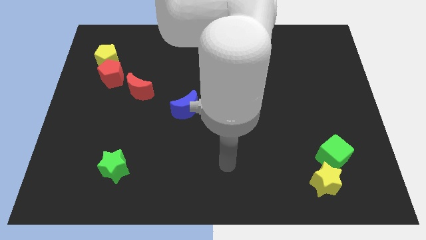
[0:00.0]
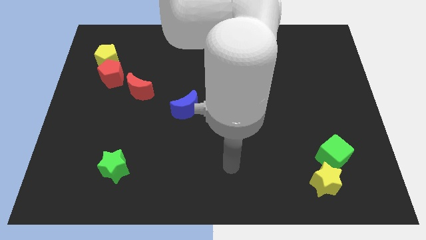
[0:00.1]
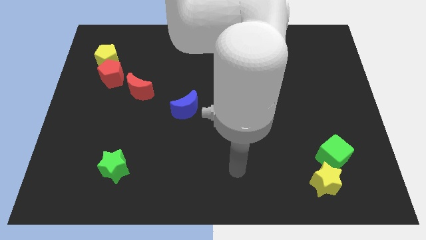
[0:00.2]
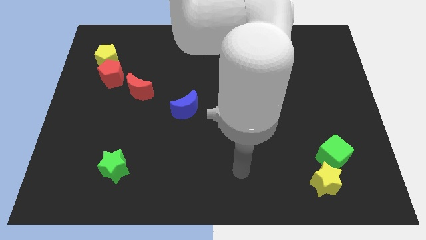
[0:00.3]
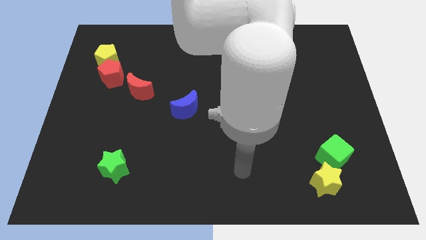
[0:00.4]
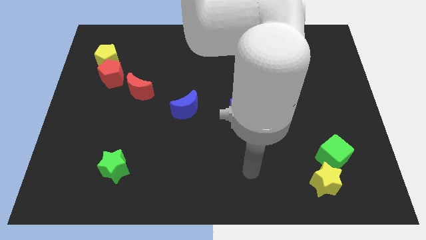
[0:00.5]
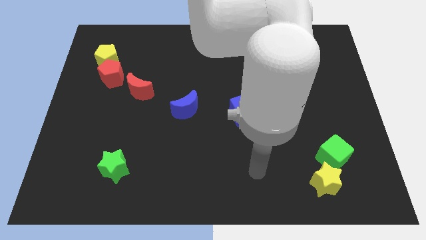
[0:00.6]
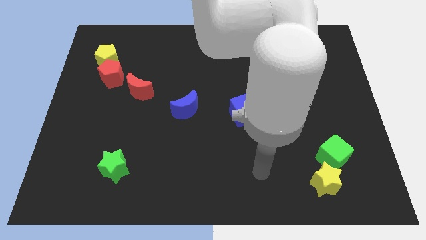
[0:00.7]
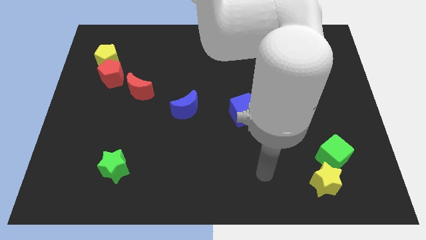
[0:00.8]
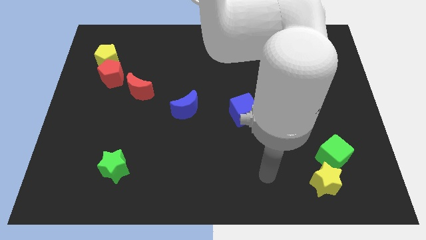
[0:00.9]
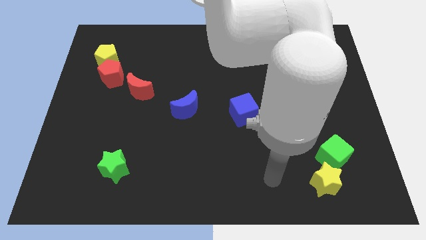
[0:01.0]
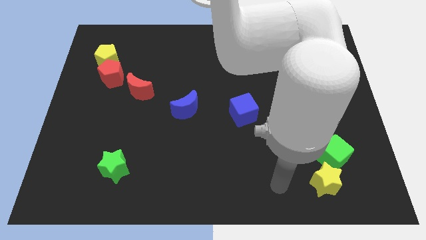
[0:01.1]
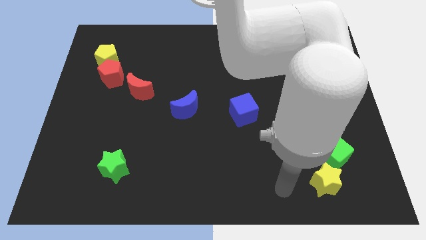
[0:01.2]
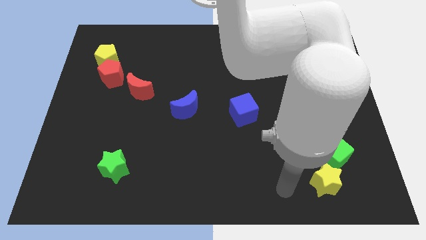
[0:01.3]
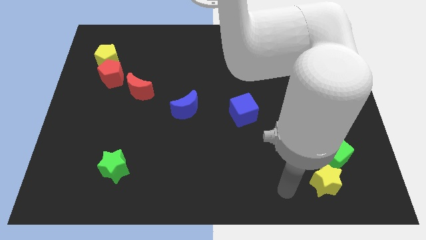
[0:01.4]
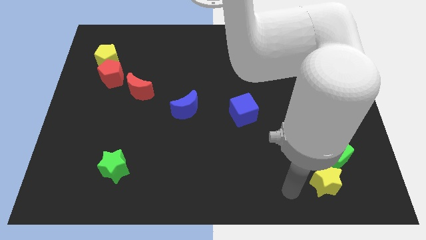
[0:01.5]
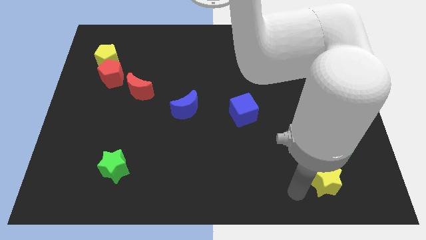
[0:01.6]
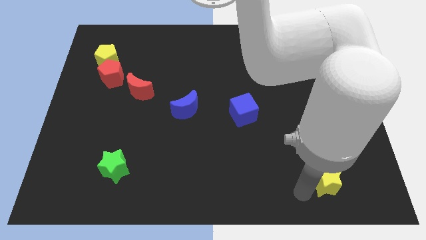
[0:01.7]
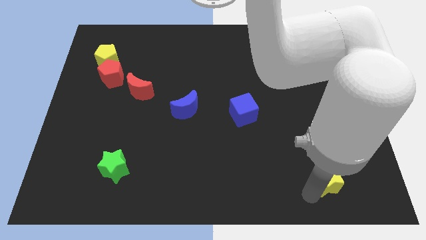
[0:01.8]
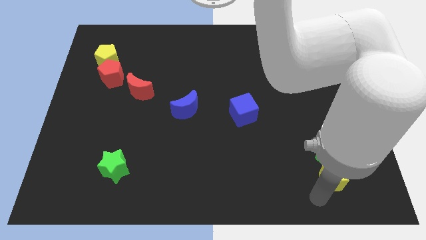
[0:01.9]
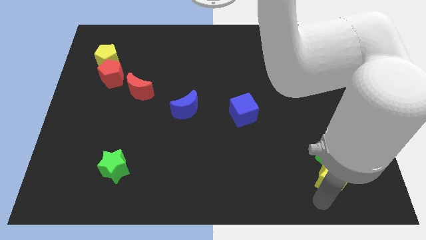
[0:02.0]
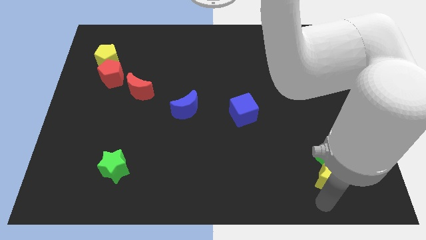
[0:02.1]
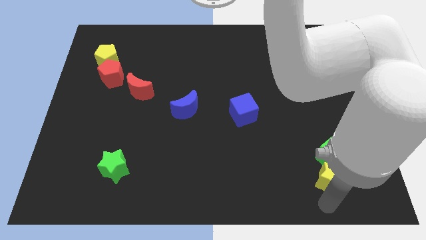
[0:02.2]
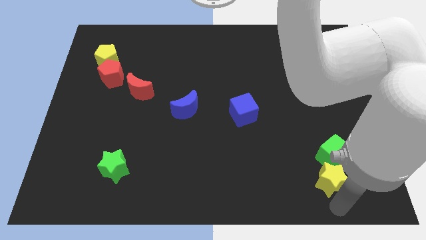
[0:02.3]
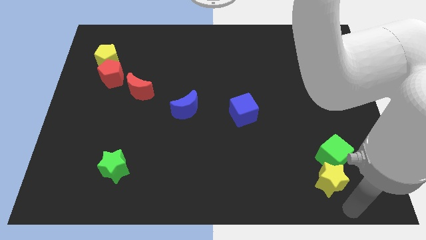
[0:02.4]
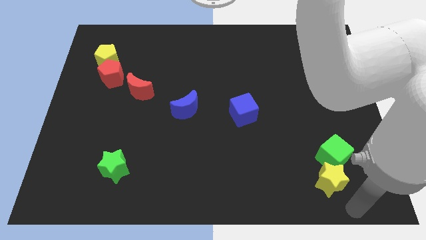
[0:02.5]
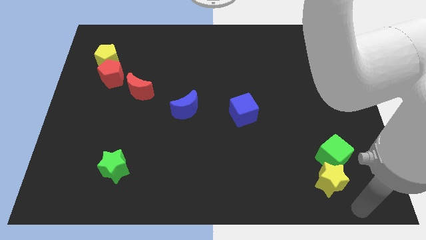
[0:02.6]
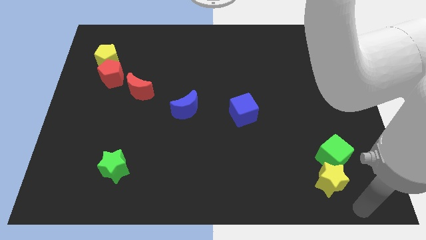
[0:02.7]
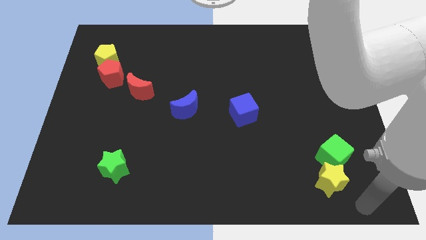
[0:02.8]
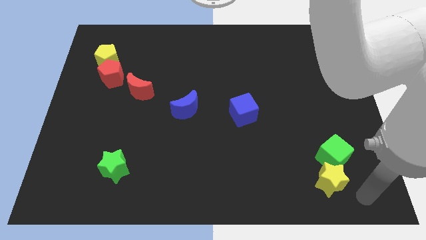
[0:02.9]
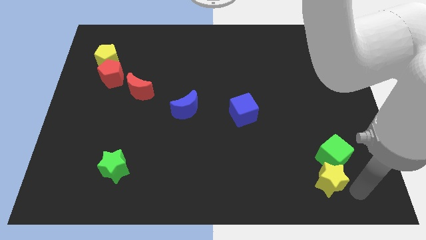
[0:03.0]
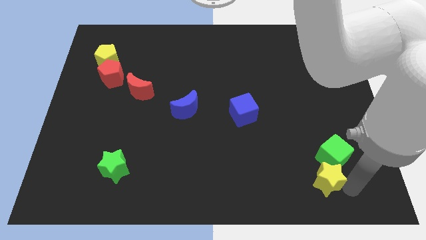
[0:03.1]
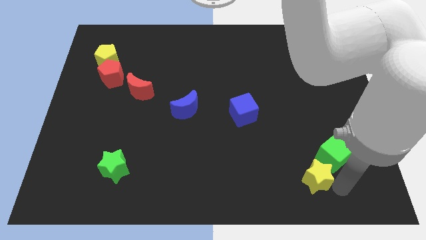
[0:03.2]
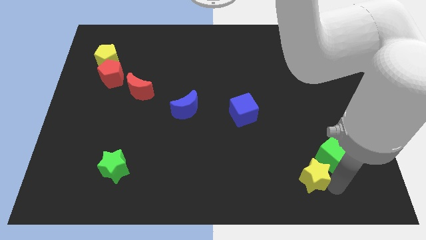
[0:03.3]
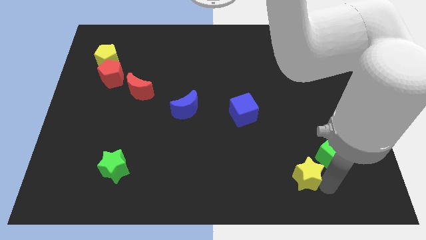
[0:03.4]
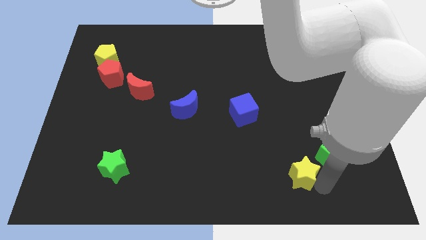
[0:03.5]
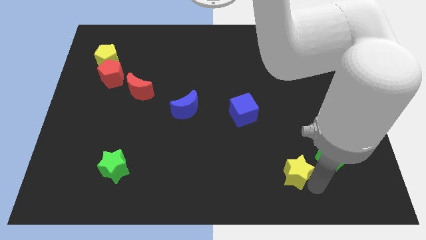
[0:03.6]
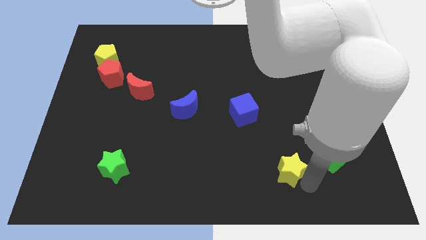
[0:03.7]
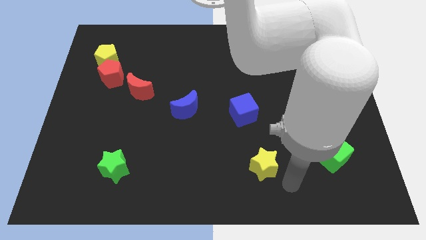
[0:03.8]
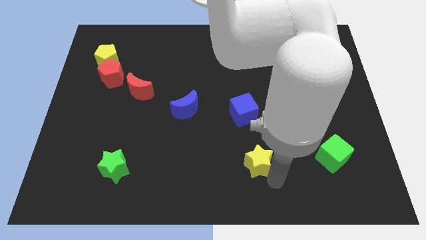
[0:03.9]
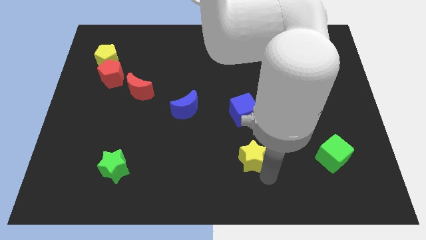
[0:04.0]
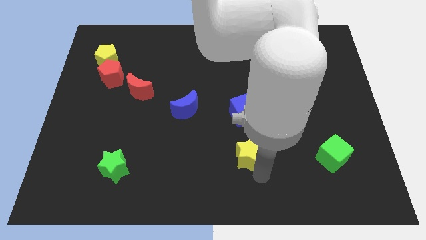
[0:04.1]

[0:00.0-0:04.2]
put the yellow star below the blue cube

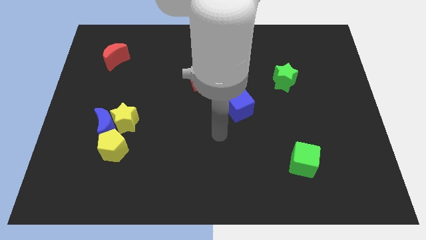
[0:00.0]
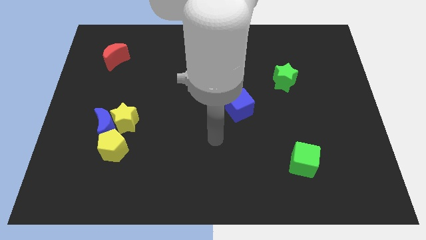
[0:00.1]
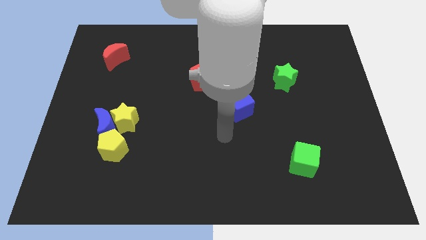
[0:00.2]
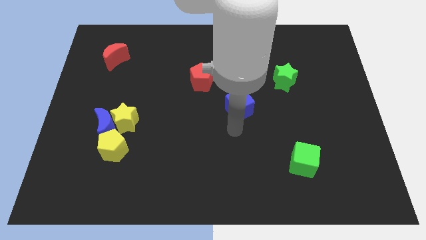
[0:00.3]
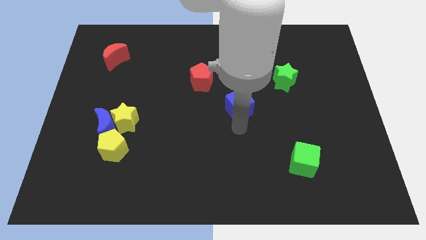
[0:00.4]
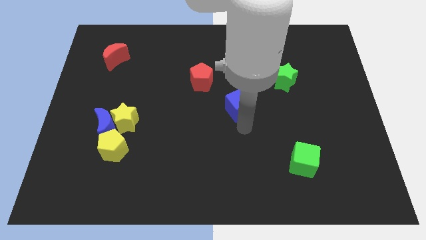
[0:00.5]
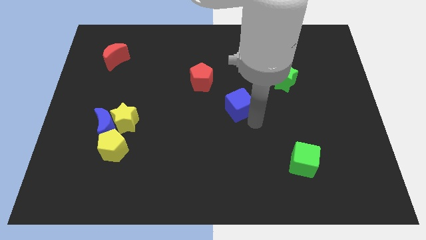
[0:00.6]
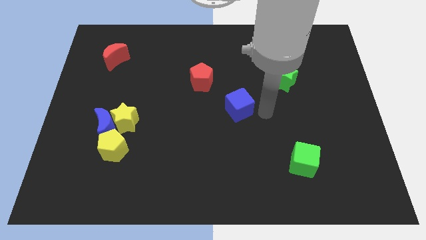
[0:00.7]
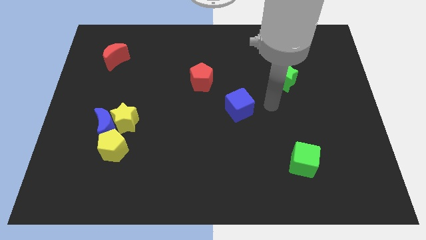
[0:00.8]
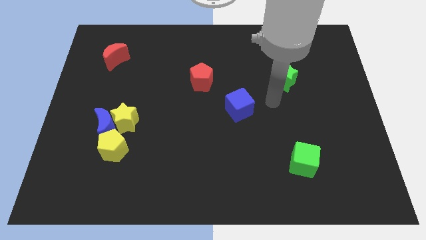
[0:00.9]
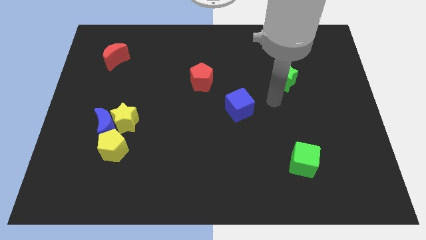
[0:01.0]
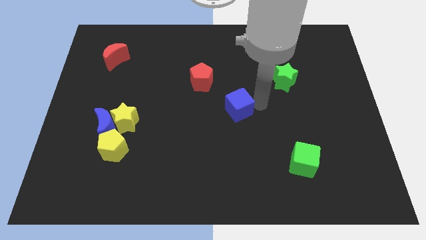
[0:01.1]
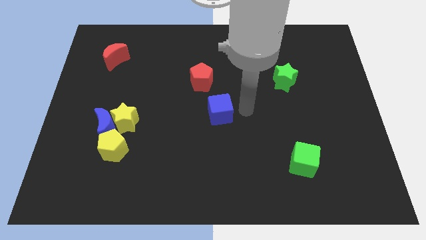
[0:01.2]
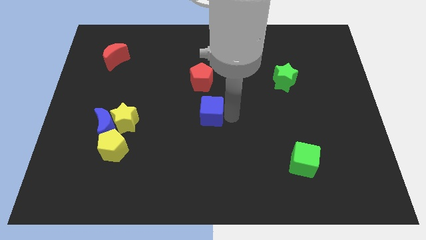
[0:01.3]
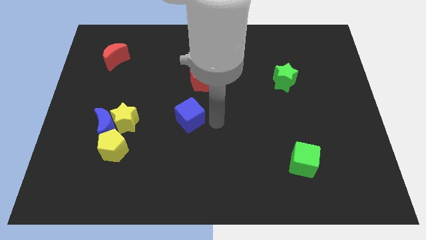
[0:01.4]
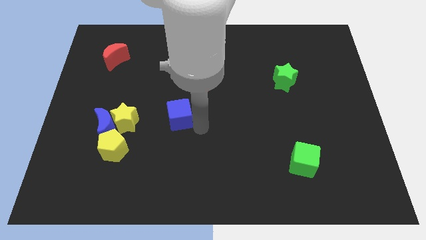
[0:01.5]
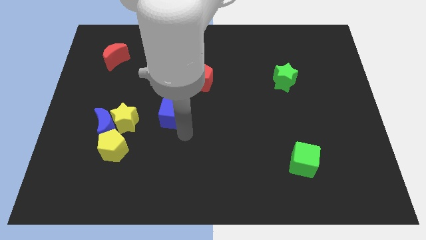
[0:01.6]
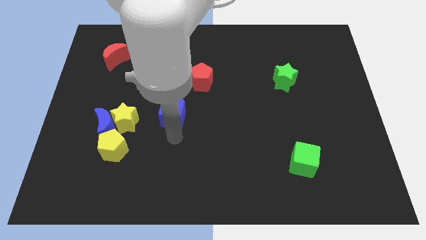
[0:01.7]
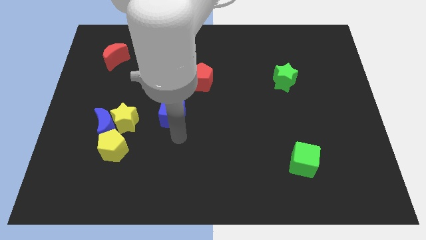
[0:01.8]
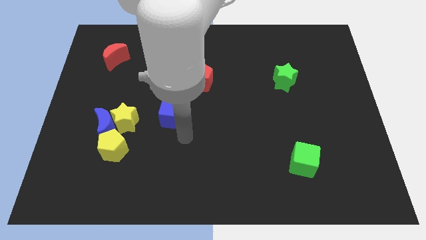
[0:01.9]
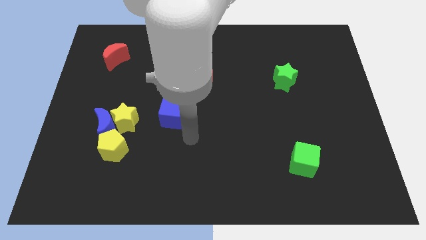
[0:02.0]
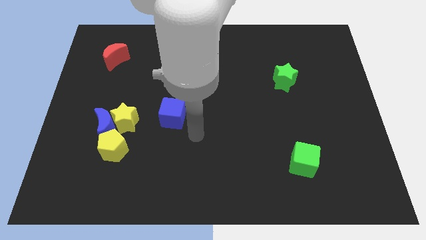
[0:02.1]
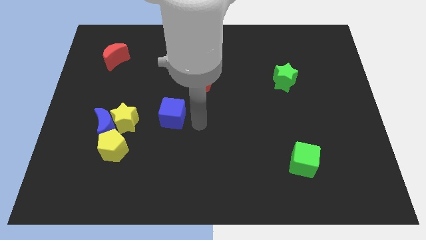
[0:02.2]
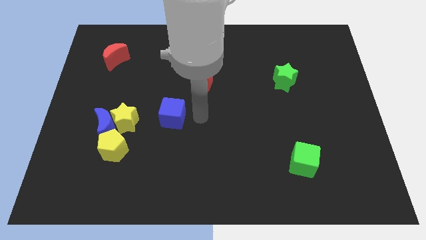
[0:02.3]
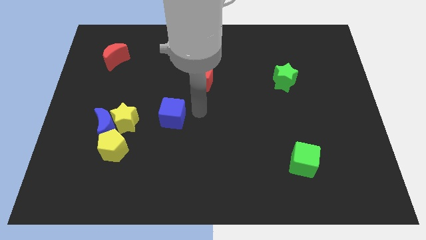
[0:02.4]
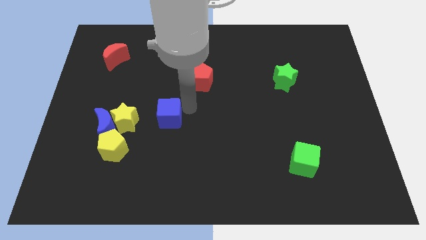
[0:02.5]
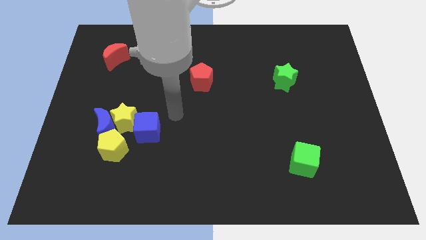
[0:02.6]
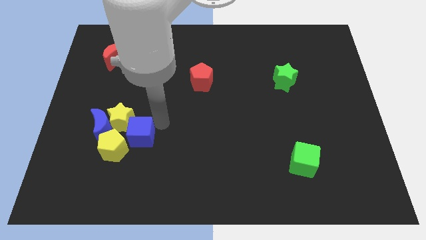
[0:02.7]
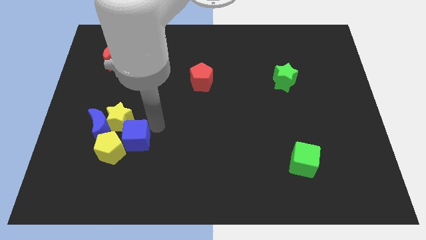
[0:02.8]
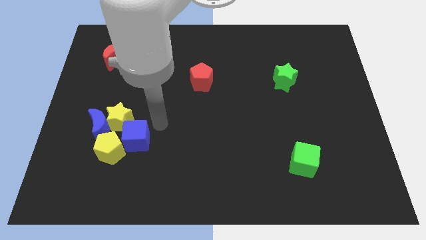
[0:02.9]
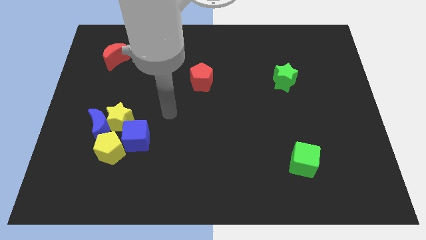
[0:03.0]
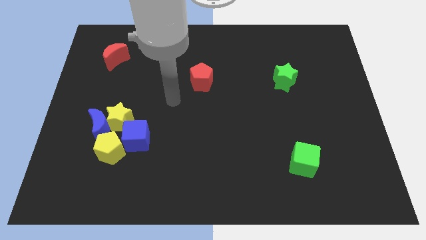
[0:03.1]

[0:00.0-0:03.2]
push the blue cube into the group of blocks

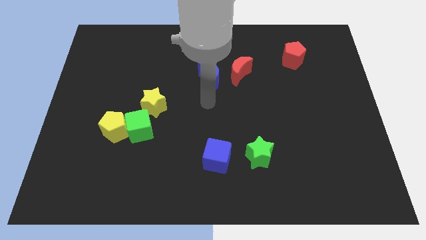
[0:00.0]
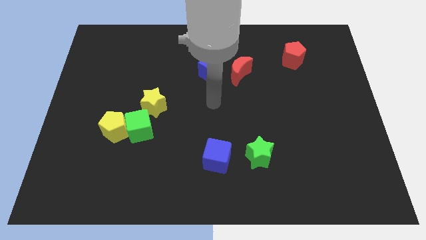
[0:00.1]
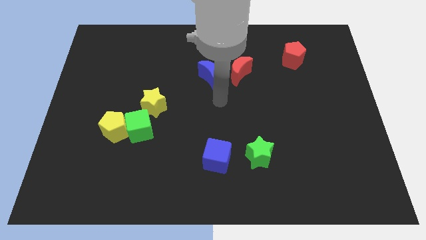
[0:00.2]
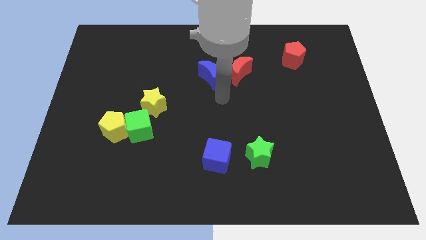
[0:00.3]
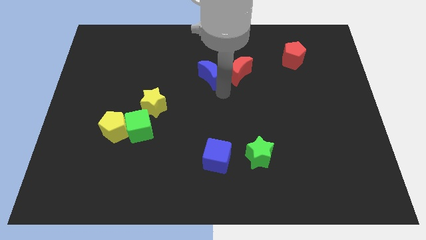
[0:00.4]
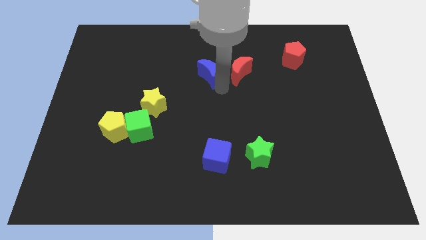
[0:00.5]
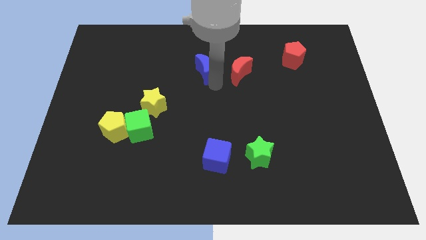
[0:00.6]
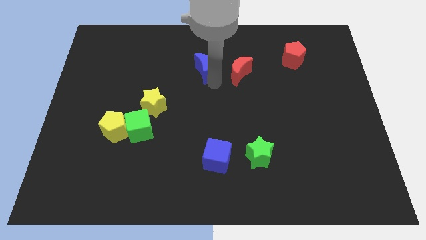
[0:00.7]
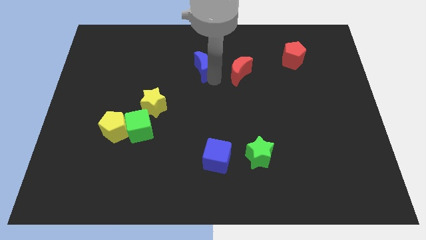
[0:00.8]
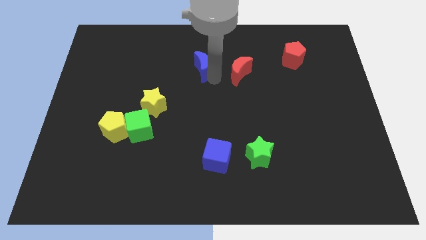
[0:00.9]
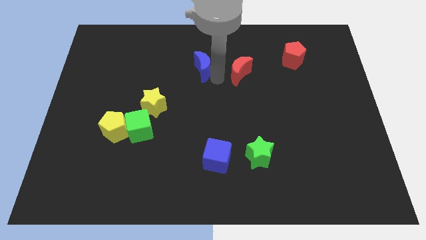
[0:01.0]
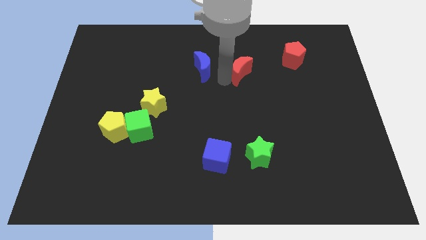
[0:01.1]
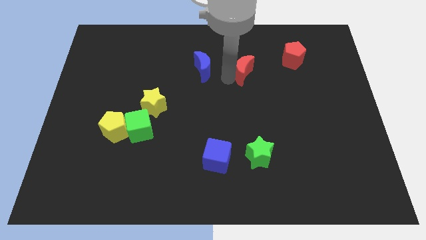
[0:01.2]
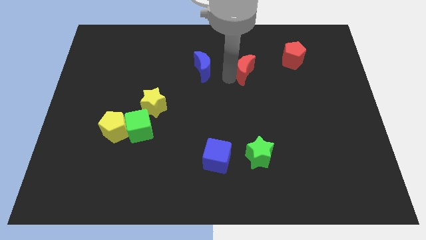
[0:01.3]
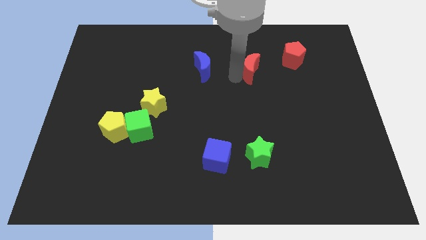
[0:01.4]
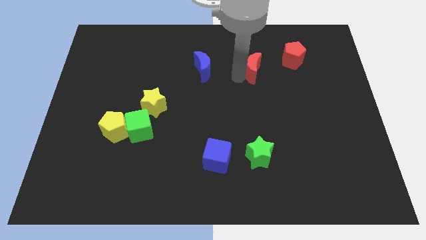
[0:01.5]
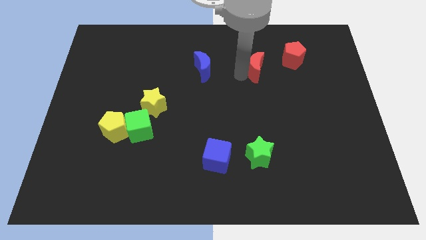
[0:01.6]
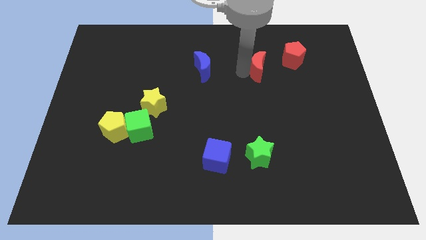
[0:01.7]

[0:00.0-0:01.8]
move red crescent towards red pentagon
